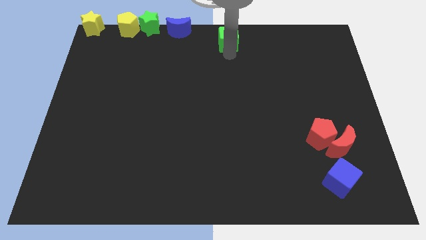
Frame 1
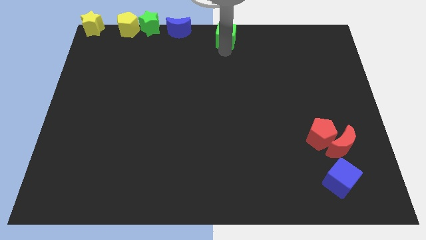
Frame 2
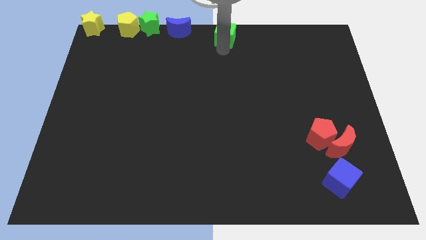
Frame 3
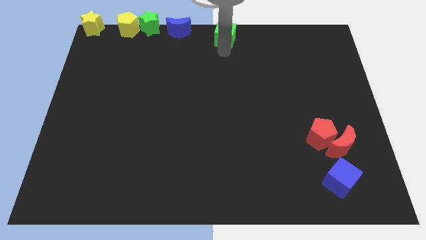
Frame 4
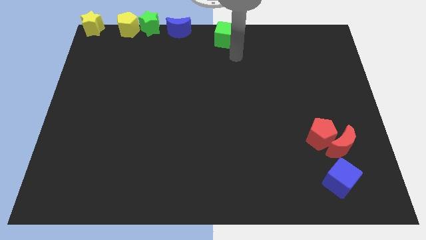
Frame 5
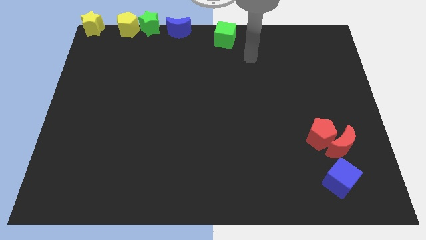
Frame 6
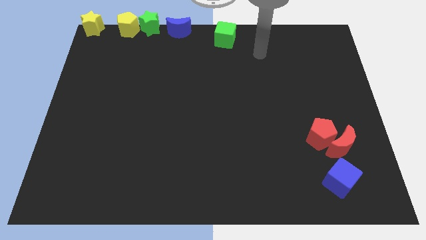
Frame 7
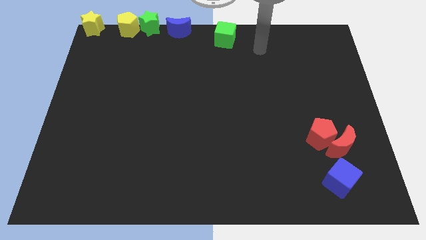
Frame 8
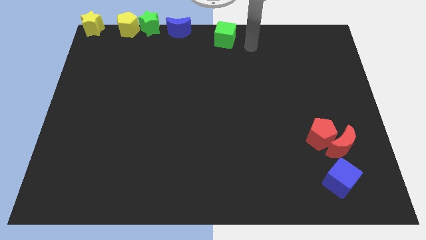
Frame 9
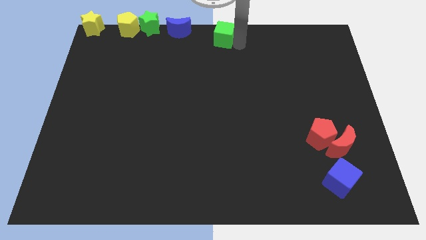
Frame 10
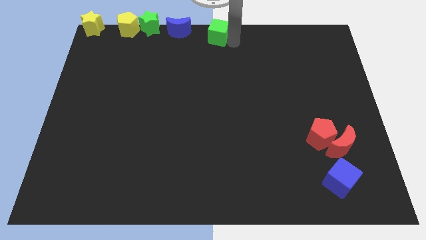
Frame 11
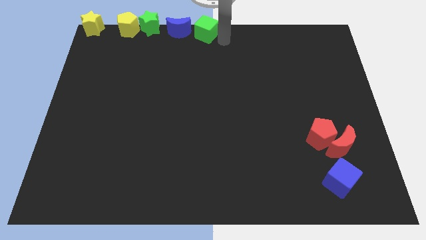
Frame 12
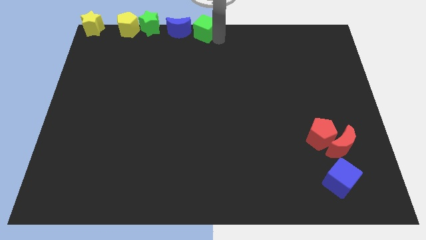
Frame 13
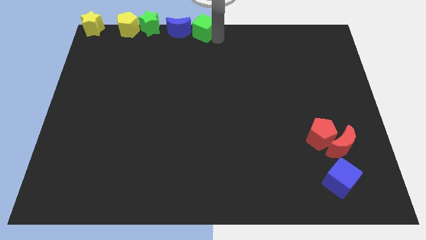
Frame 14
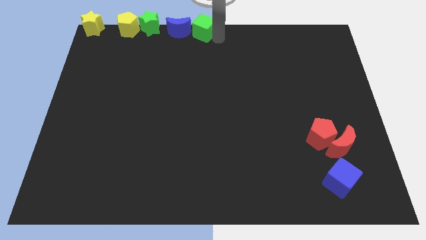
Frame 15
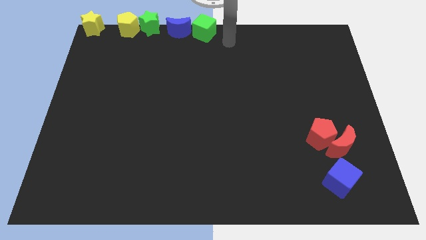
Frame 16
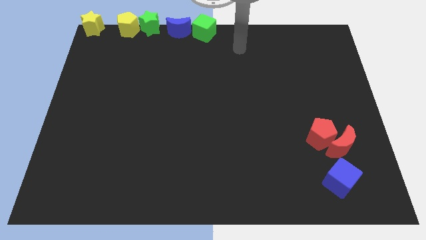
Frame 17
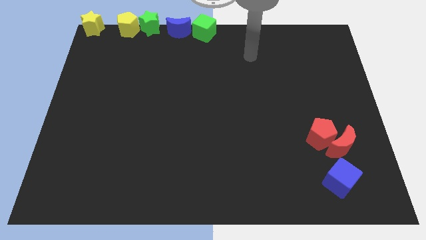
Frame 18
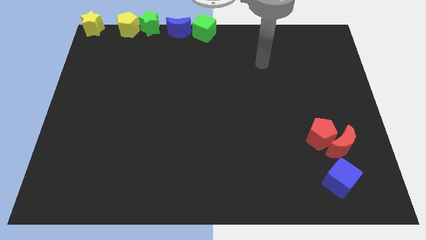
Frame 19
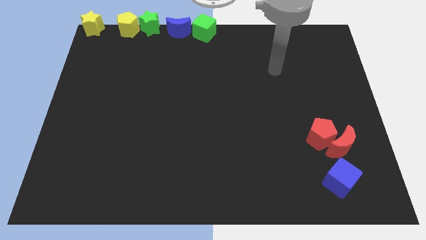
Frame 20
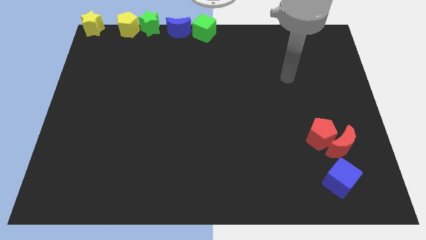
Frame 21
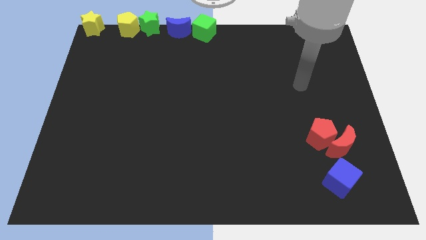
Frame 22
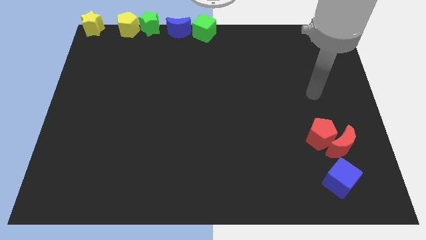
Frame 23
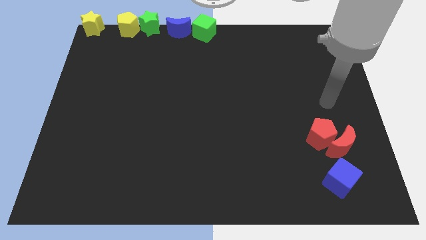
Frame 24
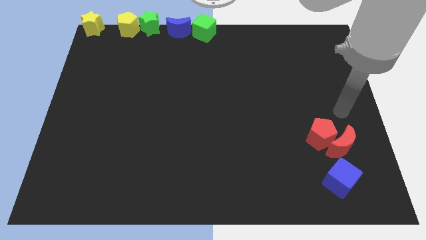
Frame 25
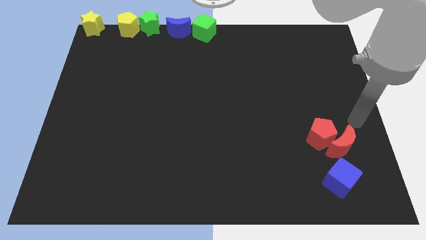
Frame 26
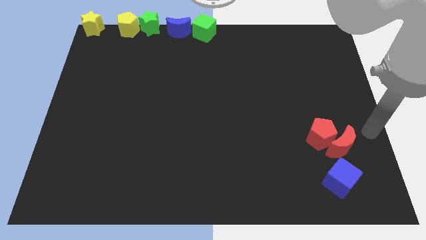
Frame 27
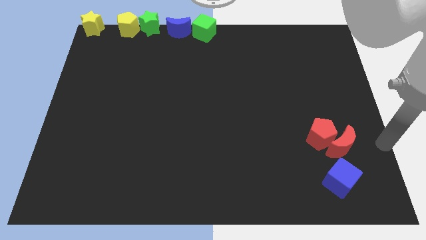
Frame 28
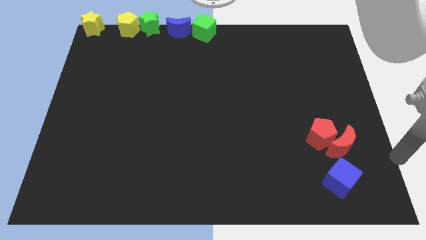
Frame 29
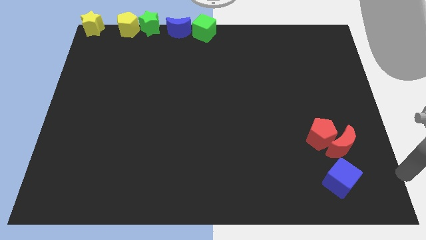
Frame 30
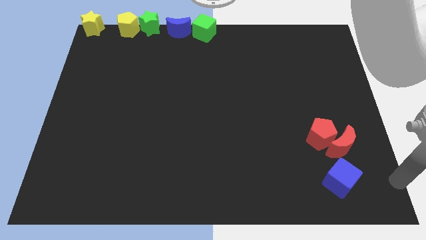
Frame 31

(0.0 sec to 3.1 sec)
slide the green cube right to the blue moon

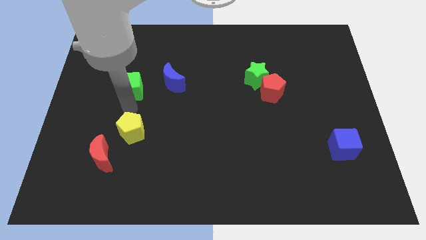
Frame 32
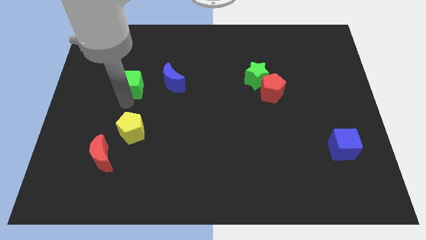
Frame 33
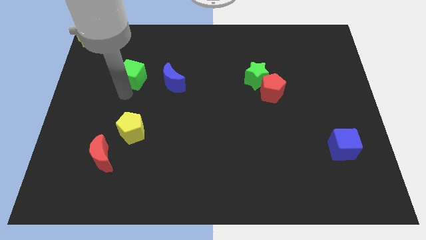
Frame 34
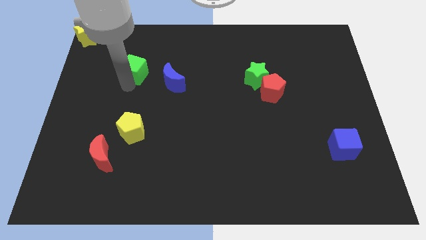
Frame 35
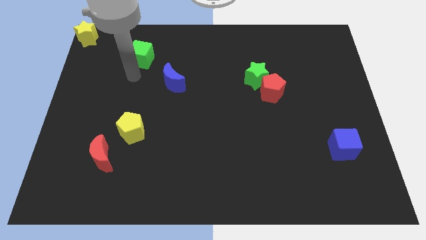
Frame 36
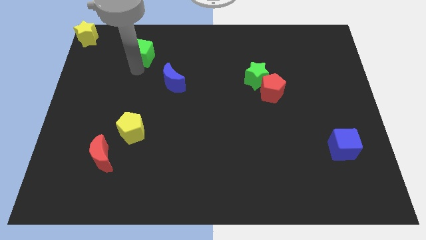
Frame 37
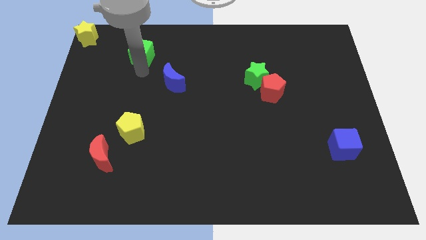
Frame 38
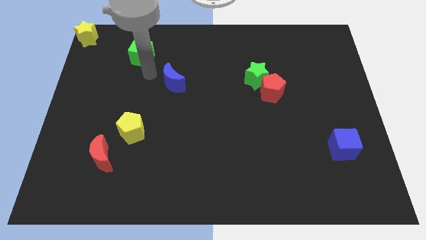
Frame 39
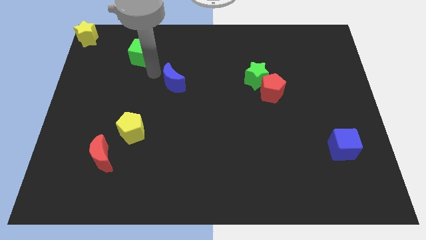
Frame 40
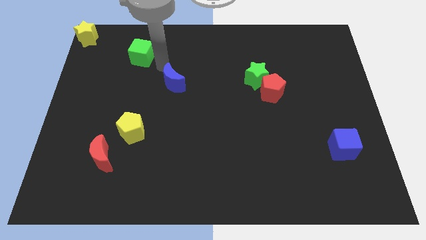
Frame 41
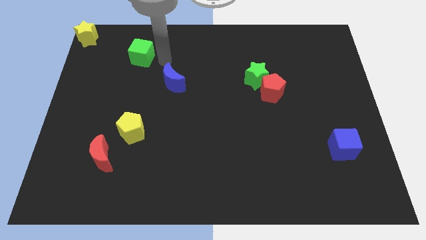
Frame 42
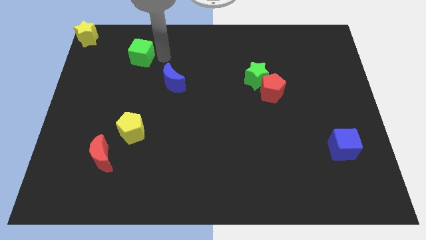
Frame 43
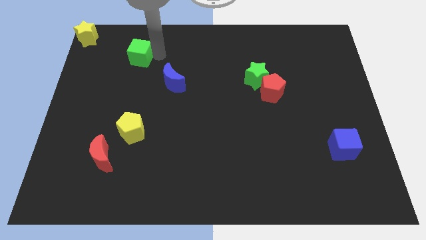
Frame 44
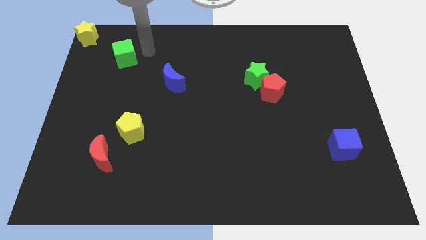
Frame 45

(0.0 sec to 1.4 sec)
move the green cube to the top left side of the board

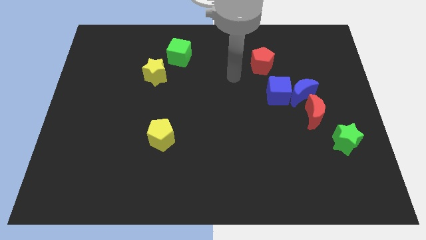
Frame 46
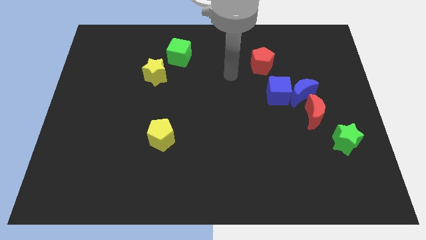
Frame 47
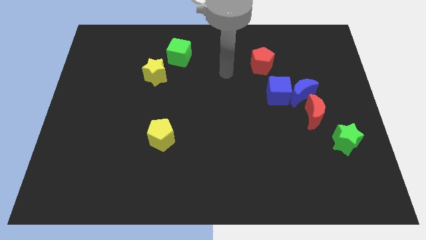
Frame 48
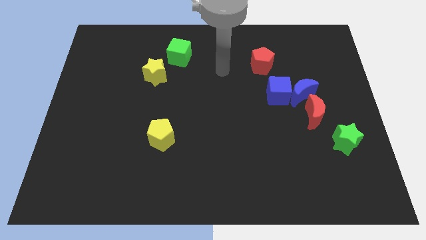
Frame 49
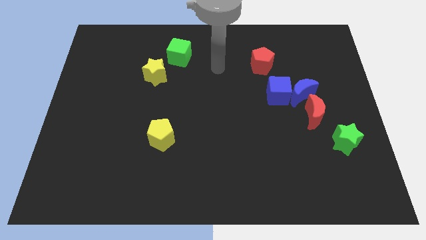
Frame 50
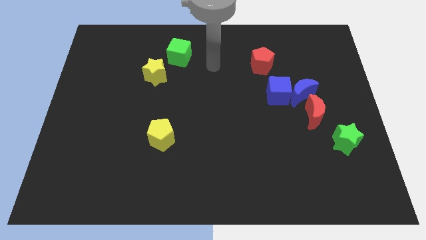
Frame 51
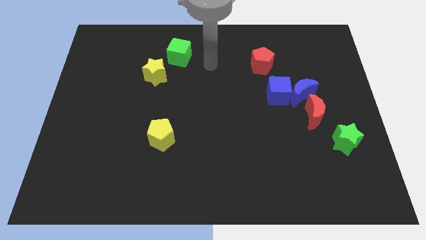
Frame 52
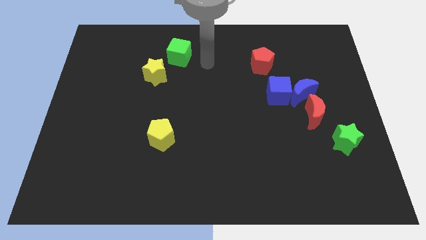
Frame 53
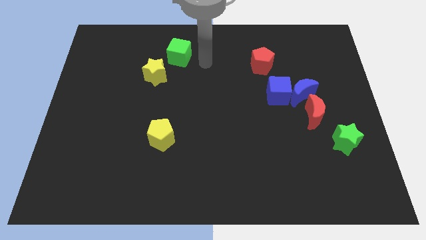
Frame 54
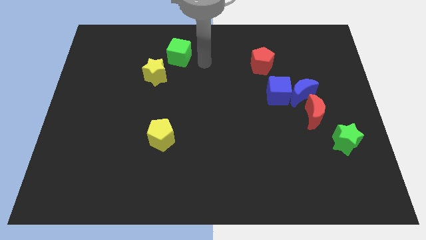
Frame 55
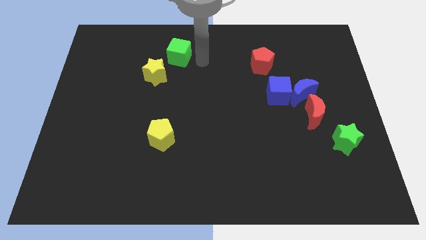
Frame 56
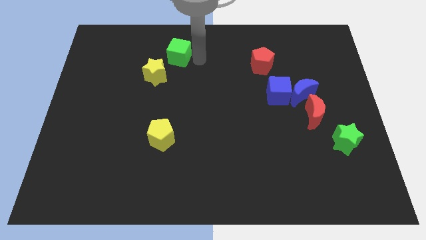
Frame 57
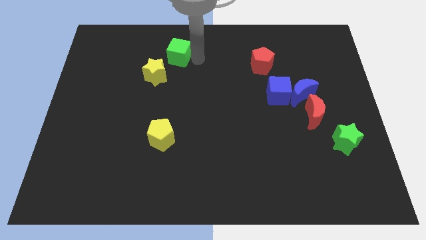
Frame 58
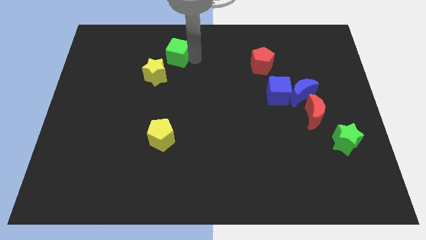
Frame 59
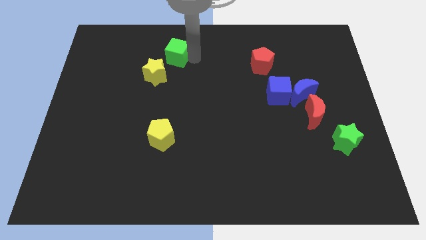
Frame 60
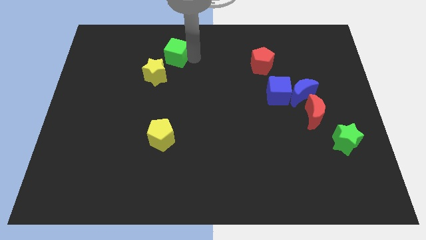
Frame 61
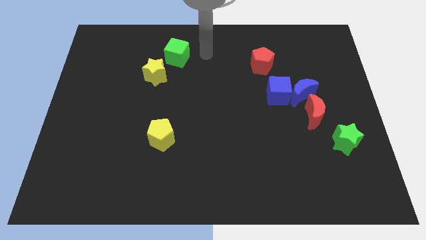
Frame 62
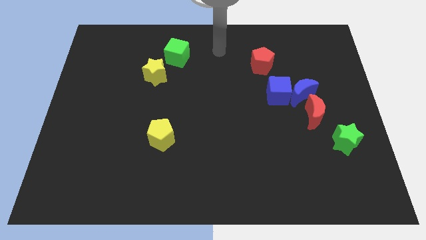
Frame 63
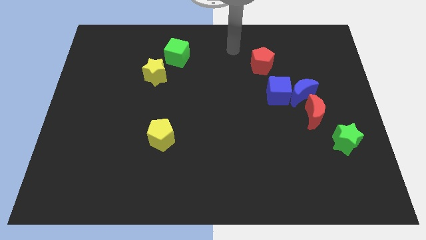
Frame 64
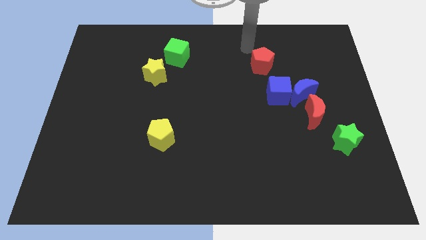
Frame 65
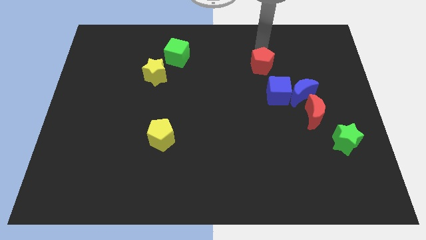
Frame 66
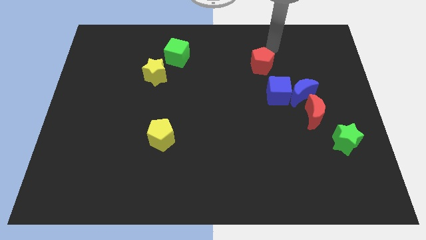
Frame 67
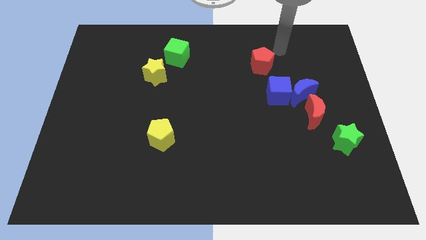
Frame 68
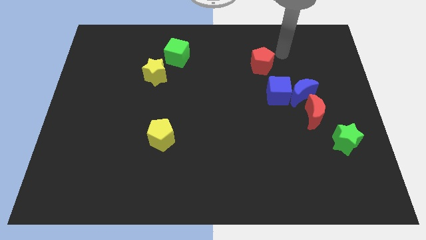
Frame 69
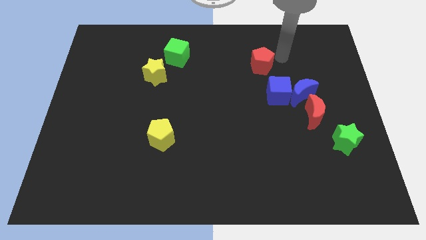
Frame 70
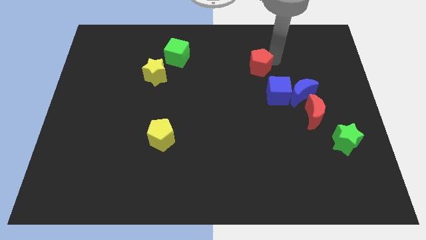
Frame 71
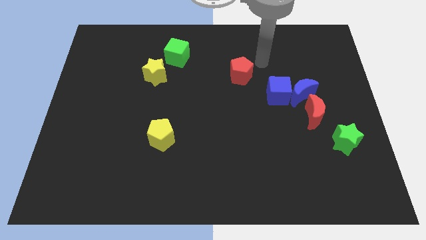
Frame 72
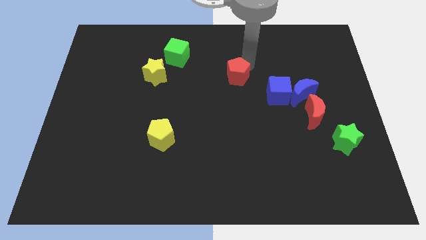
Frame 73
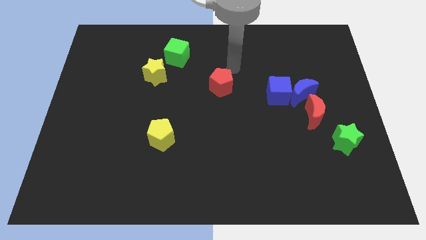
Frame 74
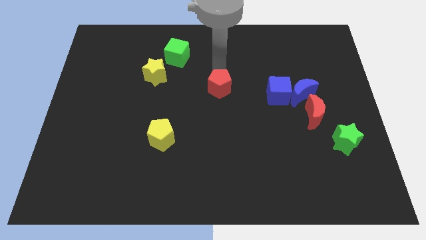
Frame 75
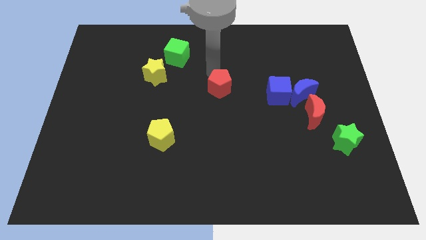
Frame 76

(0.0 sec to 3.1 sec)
slide the red pentagon towards the center of the board

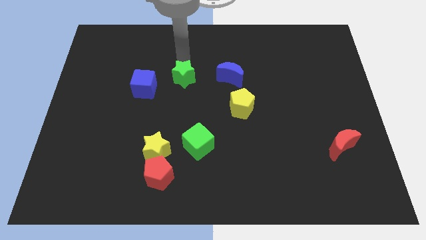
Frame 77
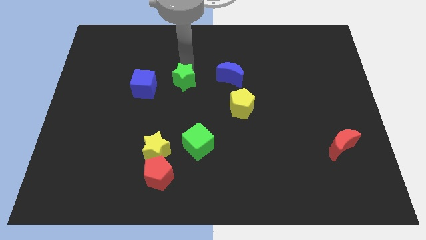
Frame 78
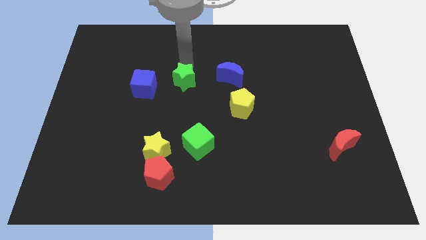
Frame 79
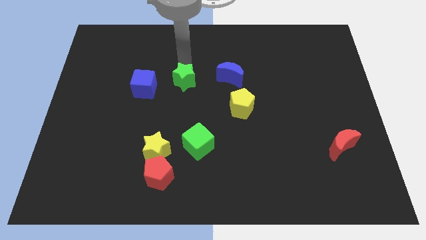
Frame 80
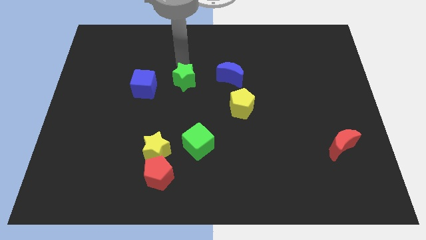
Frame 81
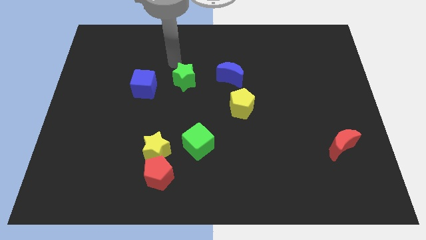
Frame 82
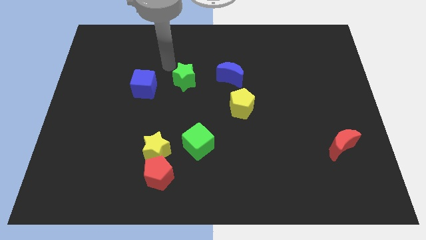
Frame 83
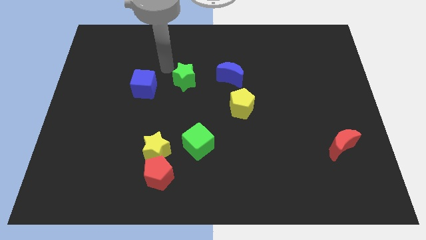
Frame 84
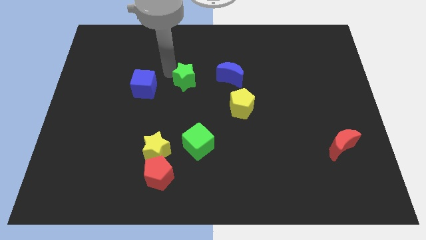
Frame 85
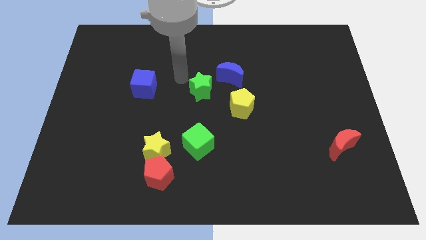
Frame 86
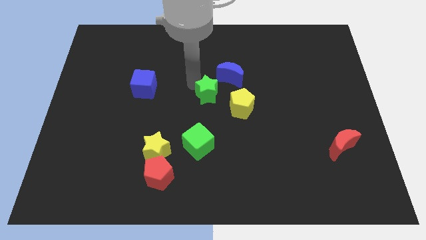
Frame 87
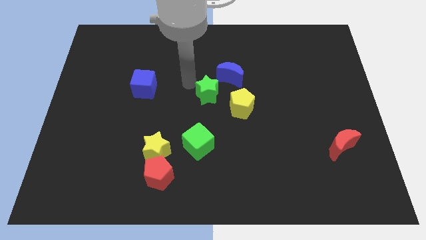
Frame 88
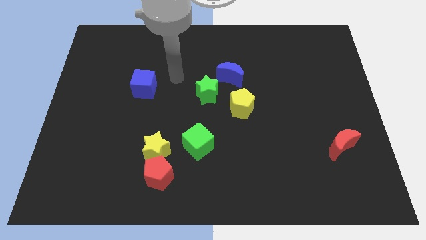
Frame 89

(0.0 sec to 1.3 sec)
drag the green star close to the yellow pentagon

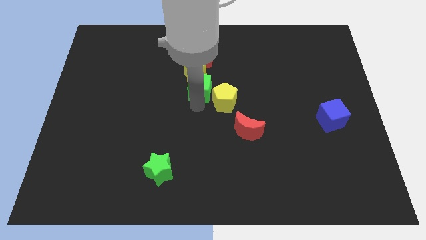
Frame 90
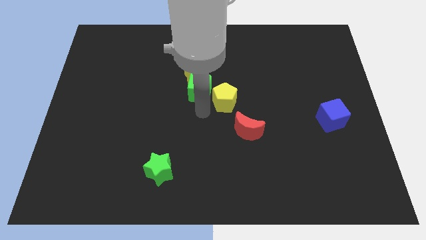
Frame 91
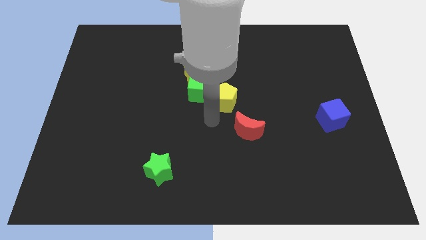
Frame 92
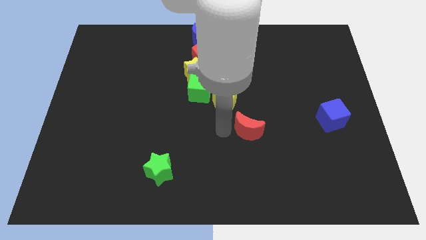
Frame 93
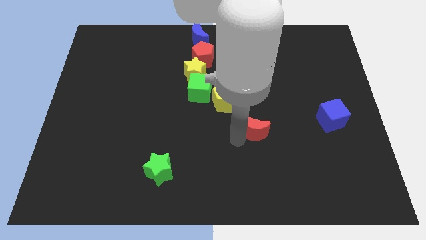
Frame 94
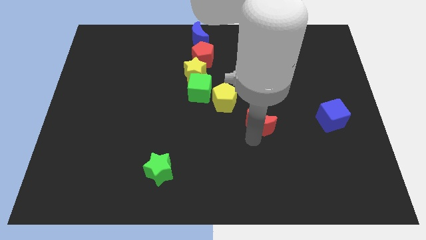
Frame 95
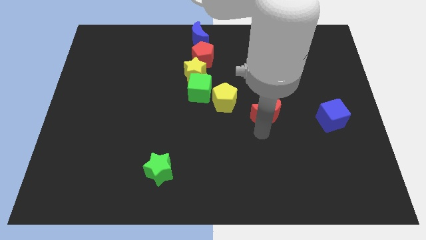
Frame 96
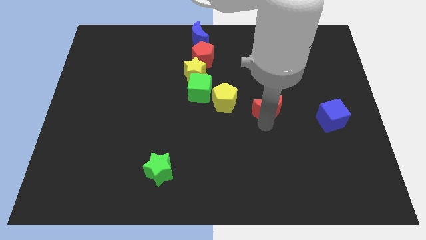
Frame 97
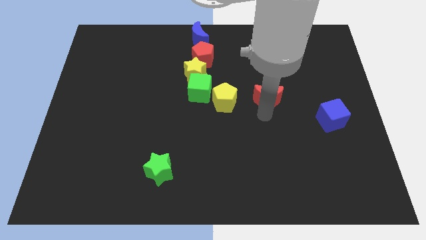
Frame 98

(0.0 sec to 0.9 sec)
place the red moon right to the yellow pentagon
